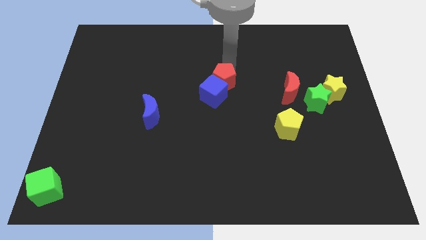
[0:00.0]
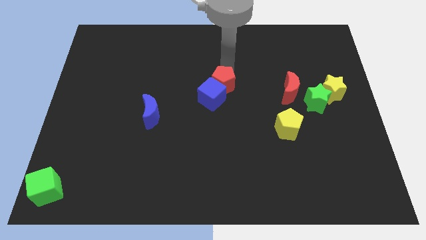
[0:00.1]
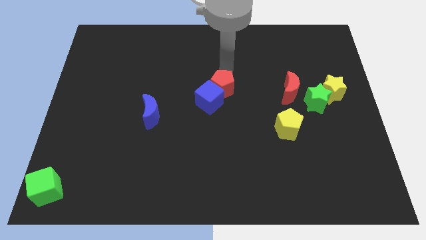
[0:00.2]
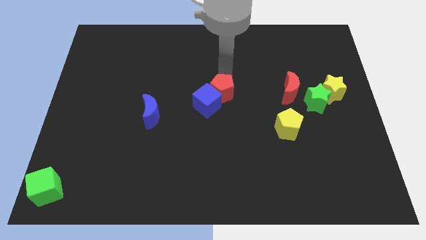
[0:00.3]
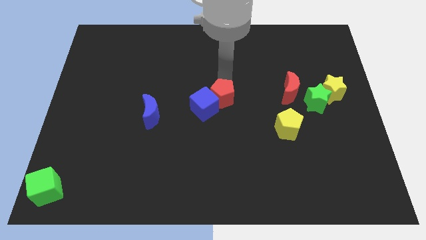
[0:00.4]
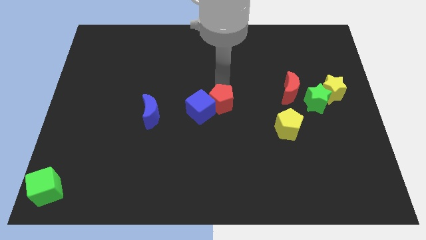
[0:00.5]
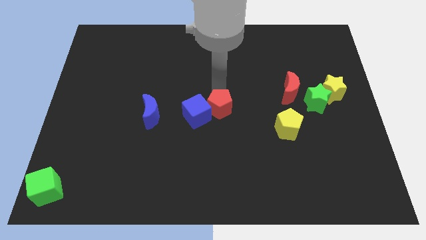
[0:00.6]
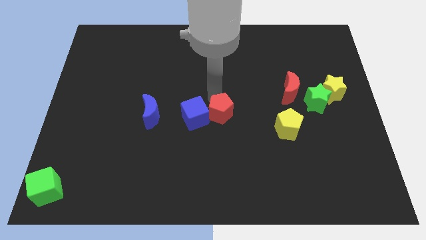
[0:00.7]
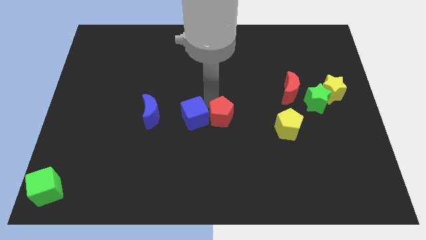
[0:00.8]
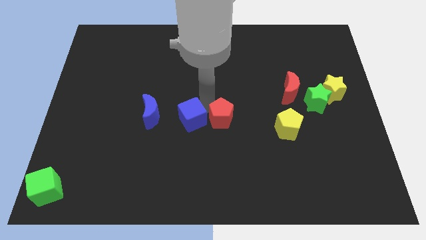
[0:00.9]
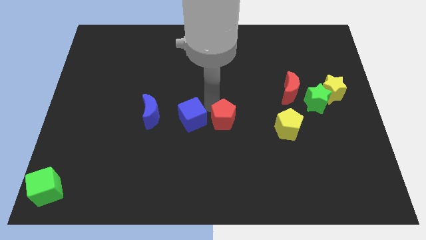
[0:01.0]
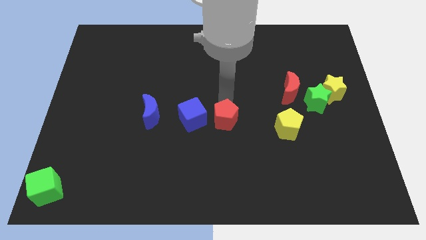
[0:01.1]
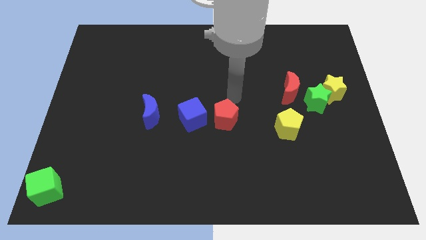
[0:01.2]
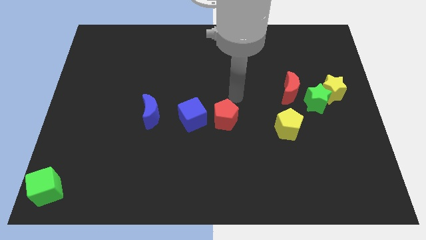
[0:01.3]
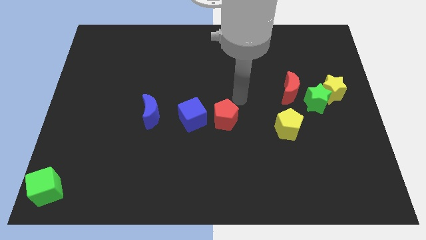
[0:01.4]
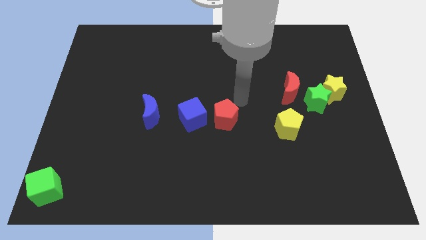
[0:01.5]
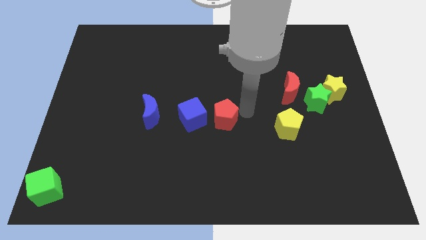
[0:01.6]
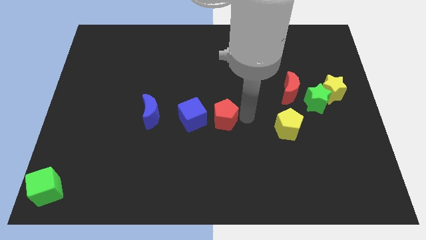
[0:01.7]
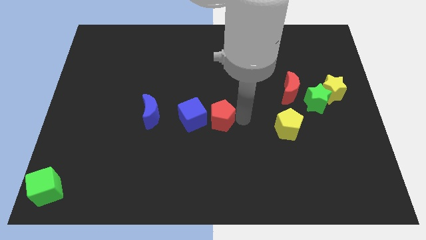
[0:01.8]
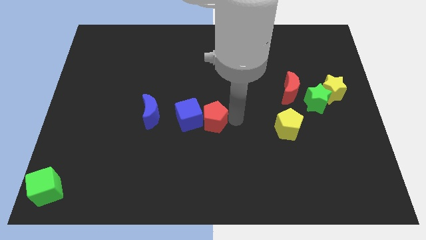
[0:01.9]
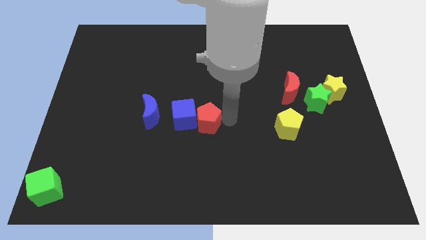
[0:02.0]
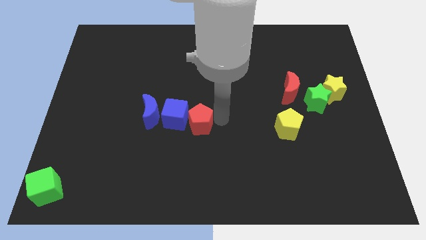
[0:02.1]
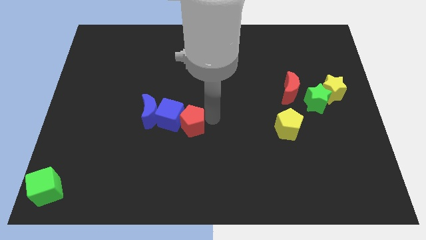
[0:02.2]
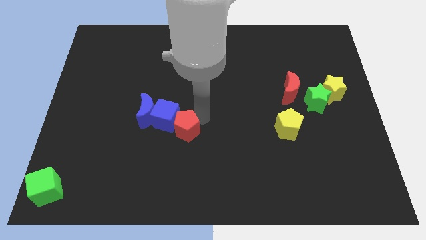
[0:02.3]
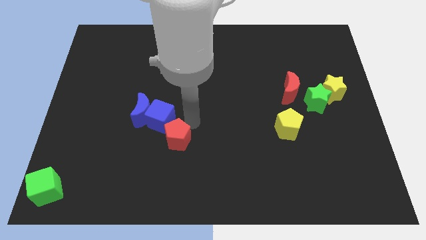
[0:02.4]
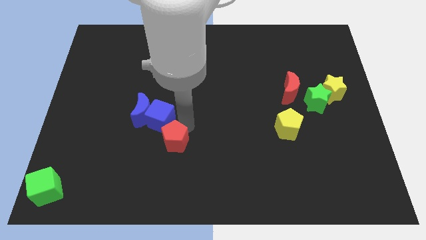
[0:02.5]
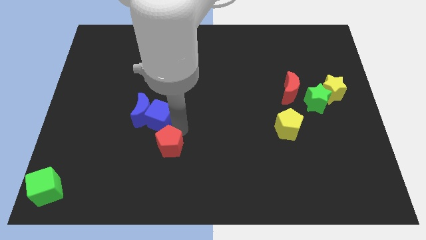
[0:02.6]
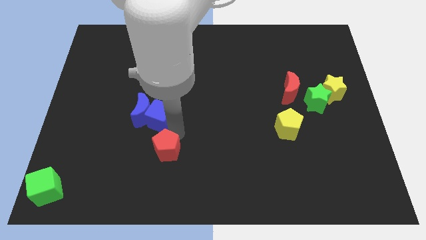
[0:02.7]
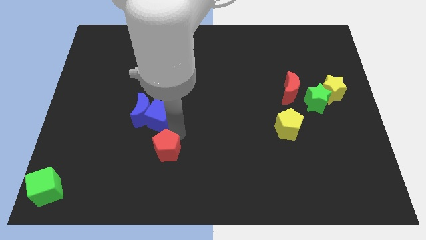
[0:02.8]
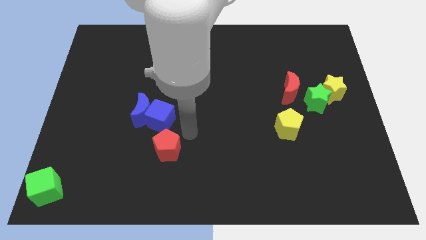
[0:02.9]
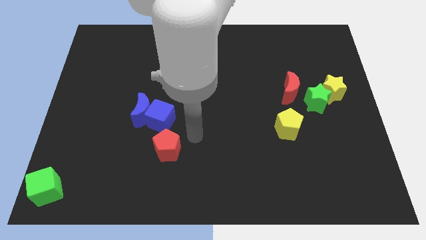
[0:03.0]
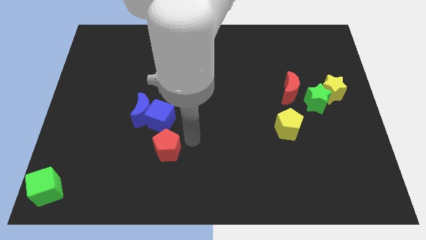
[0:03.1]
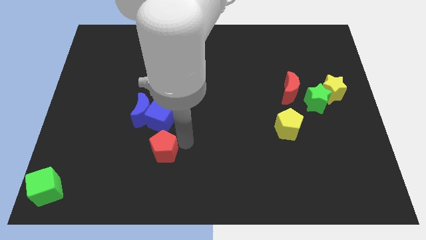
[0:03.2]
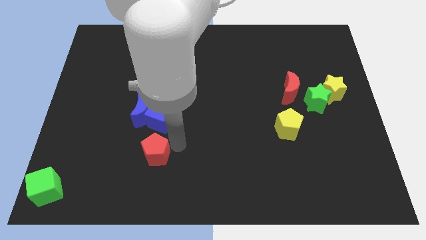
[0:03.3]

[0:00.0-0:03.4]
move the red pentagon to the bottom of the blue cube

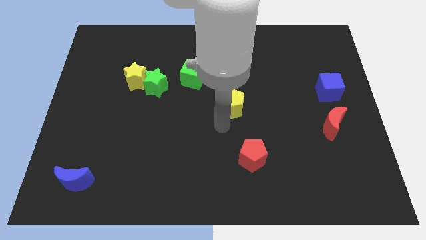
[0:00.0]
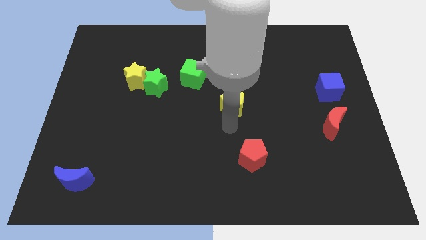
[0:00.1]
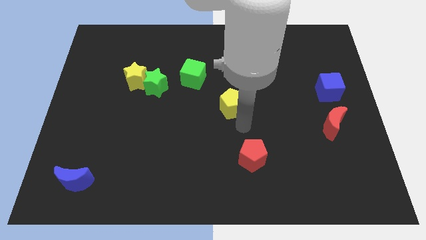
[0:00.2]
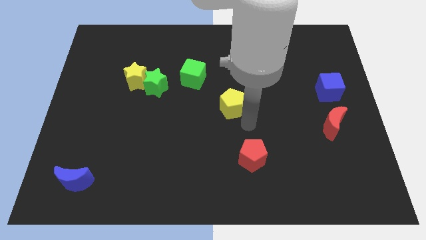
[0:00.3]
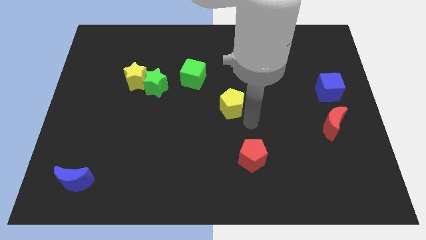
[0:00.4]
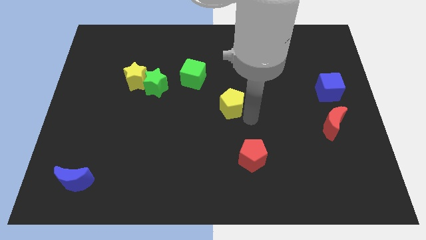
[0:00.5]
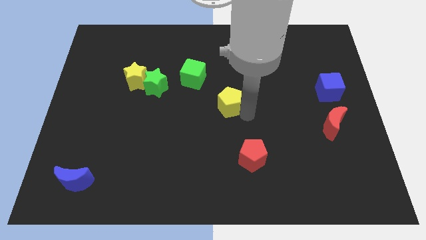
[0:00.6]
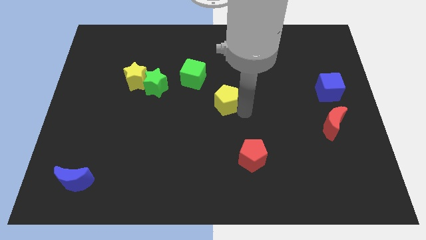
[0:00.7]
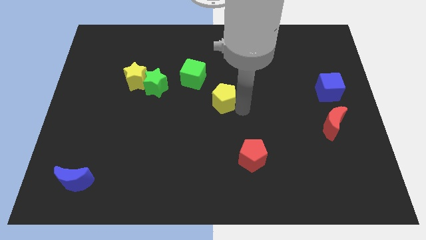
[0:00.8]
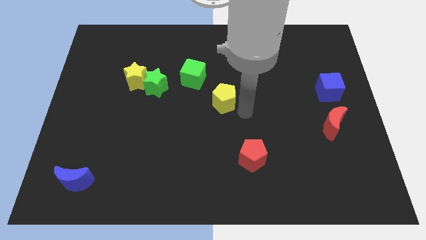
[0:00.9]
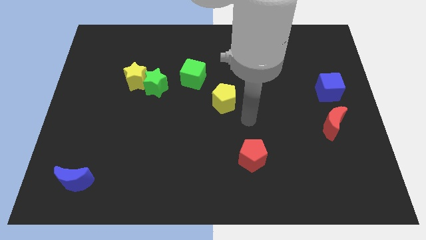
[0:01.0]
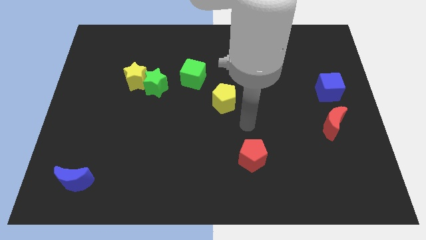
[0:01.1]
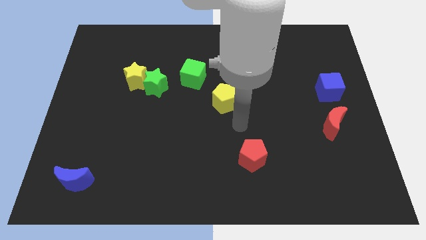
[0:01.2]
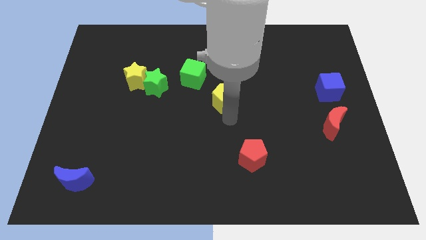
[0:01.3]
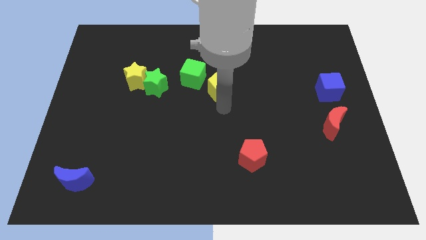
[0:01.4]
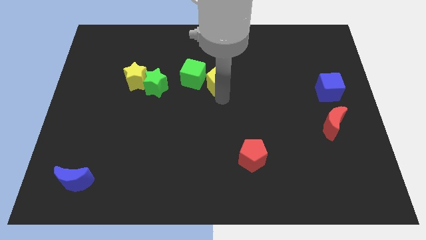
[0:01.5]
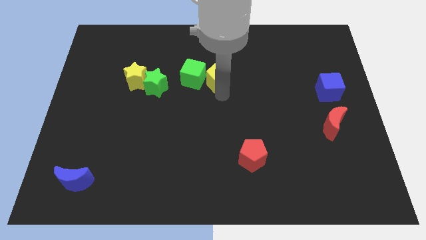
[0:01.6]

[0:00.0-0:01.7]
move the yellow pentagon to the right of the green cube

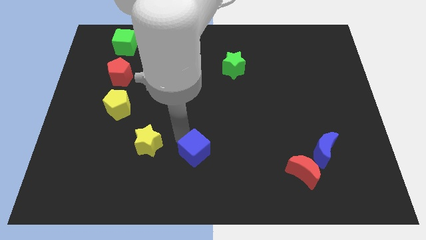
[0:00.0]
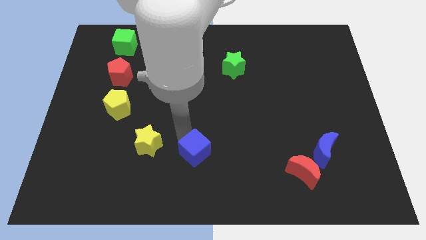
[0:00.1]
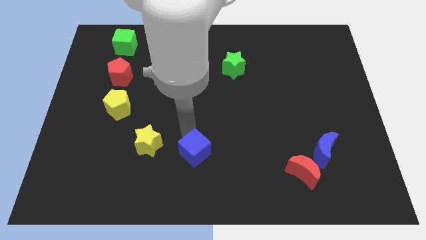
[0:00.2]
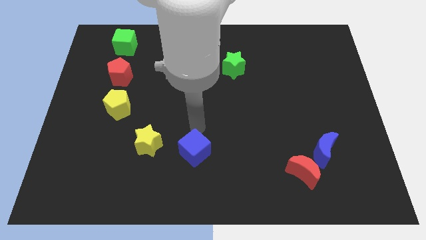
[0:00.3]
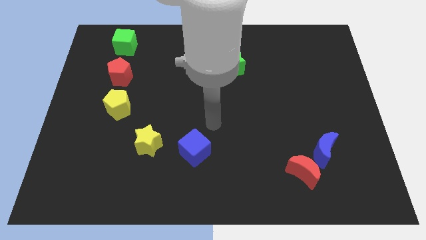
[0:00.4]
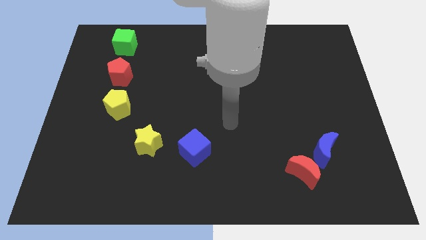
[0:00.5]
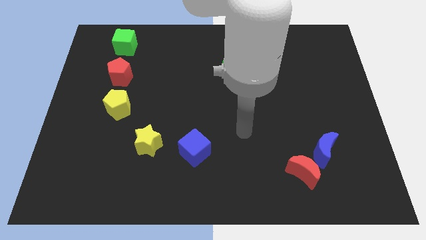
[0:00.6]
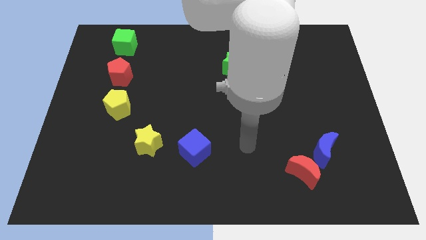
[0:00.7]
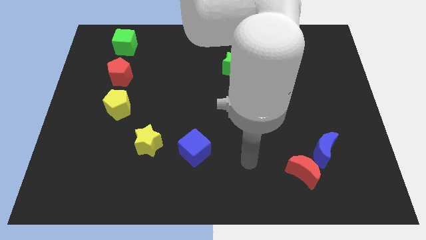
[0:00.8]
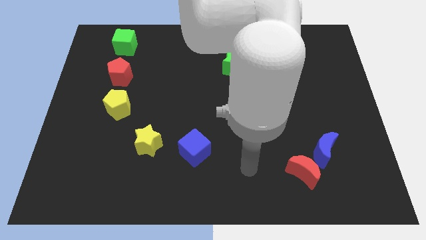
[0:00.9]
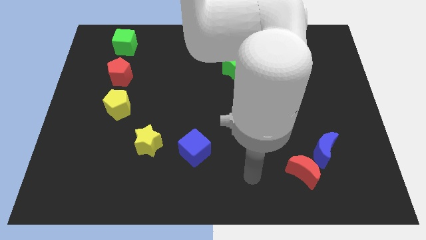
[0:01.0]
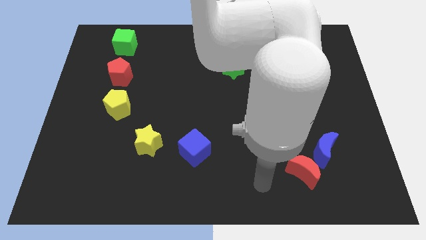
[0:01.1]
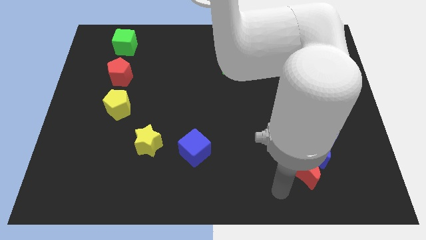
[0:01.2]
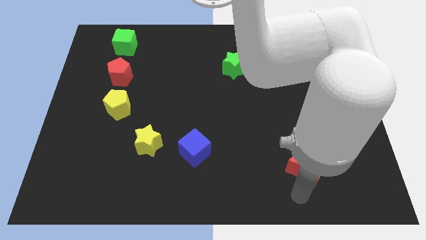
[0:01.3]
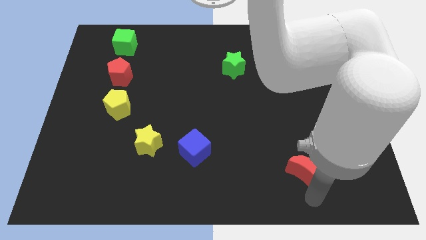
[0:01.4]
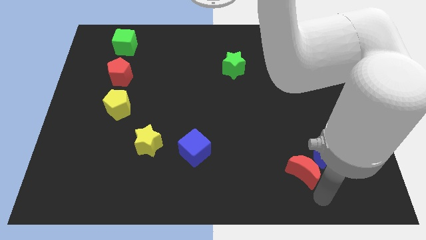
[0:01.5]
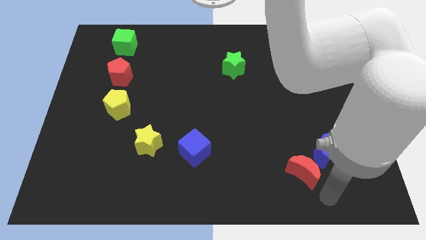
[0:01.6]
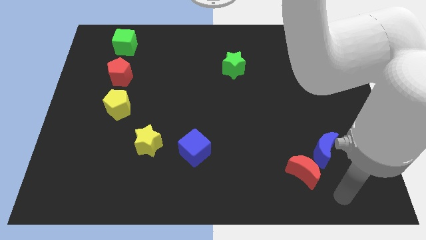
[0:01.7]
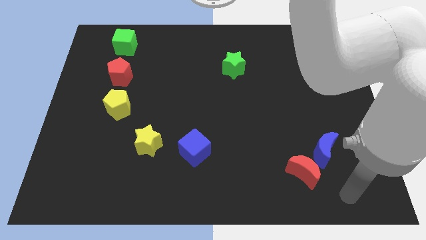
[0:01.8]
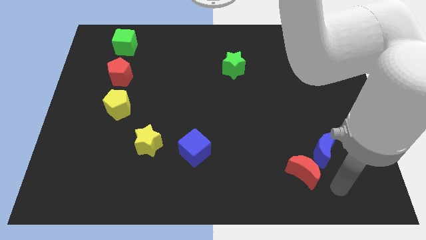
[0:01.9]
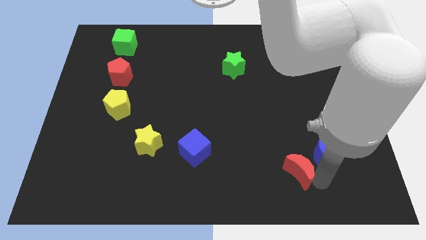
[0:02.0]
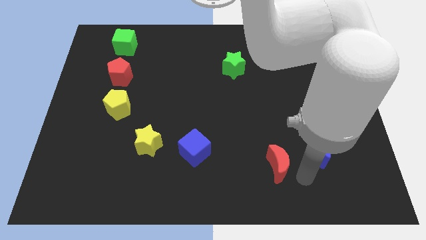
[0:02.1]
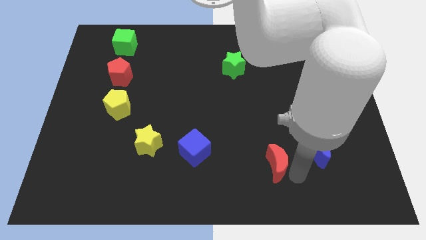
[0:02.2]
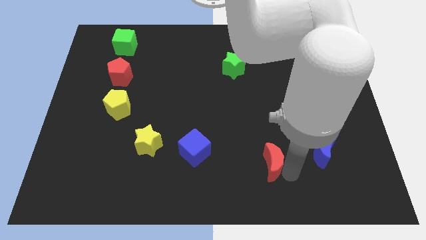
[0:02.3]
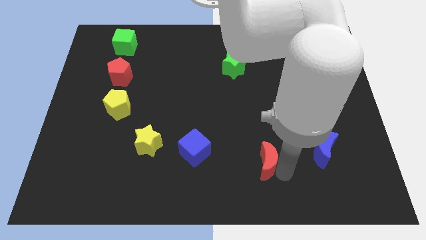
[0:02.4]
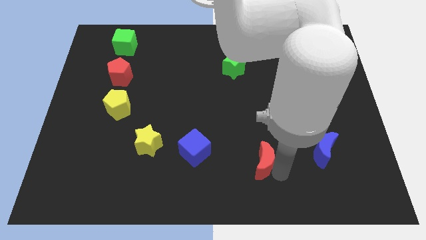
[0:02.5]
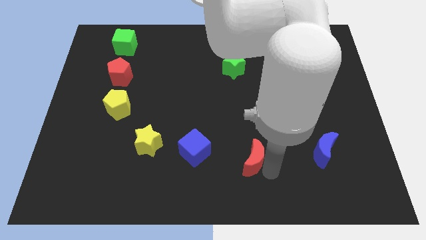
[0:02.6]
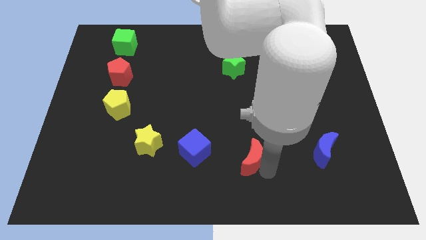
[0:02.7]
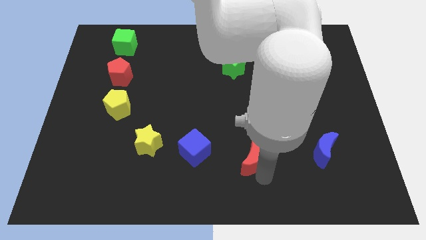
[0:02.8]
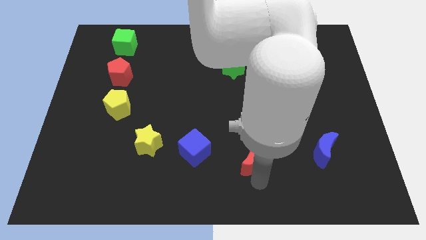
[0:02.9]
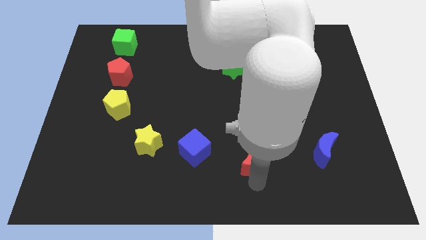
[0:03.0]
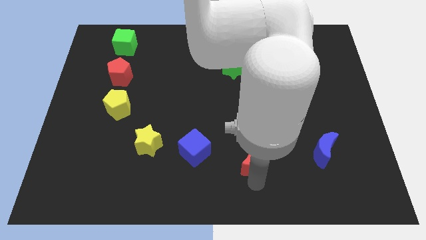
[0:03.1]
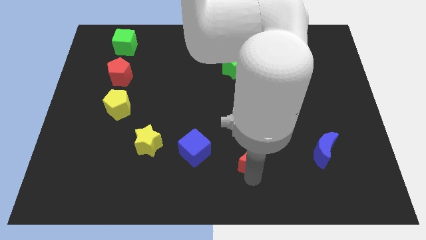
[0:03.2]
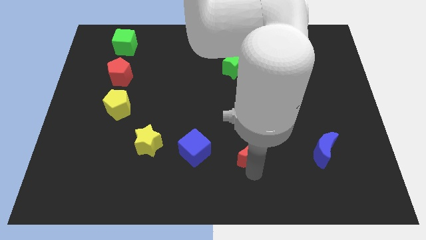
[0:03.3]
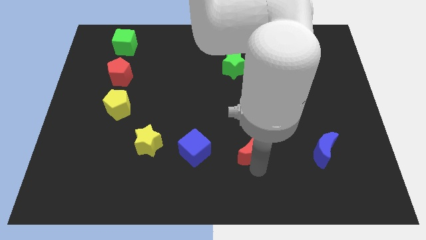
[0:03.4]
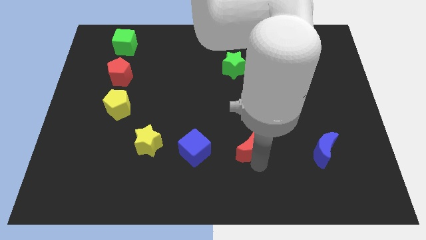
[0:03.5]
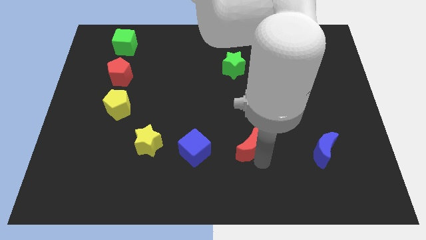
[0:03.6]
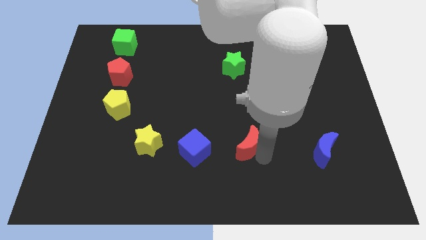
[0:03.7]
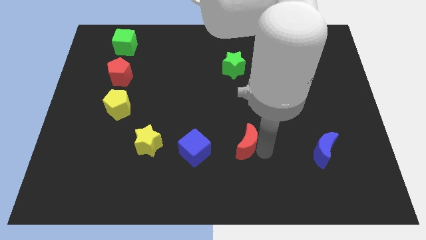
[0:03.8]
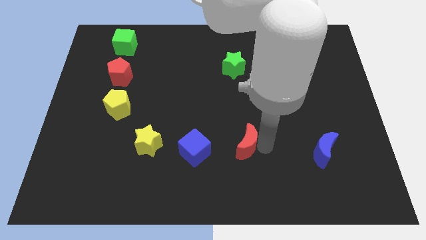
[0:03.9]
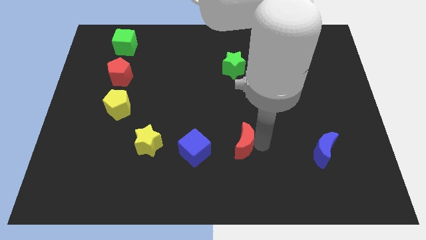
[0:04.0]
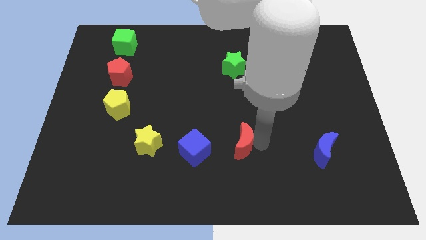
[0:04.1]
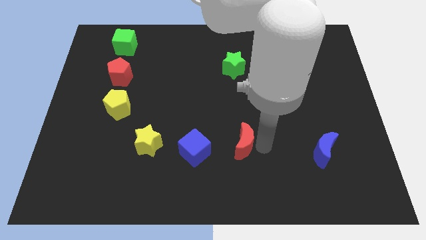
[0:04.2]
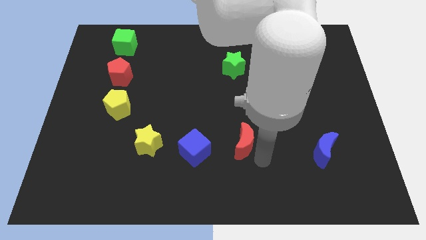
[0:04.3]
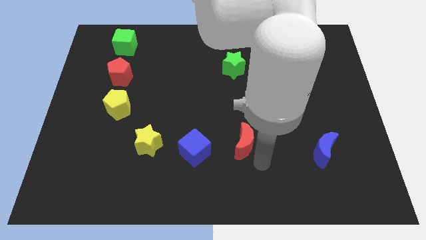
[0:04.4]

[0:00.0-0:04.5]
place the red moon below the green star
